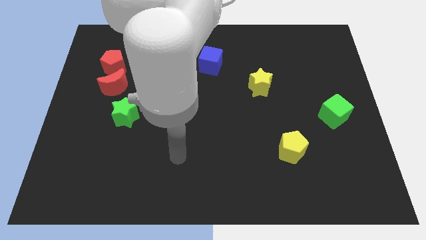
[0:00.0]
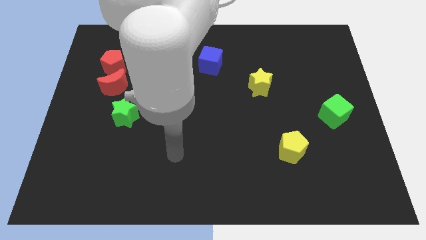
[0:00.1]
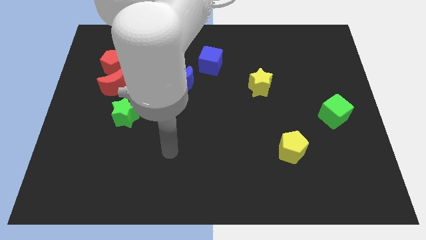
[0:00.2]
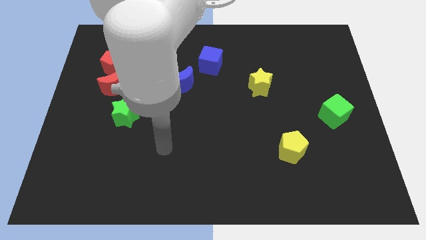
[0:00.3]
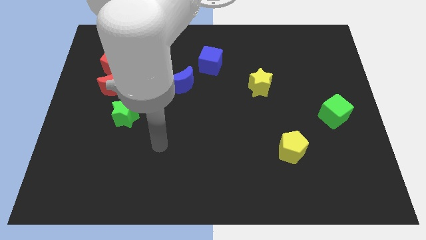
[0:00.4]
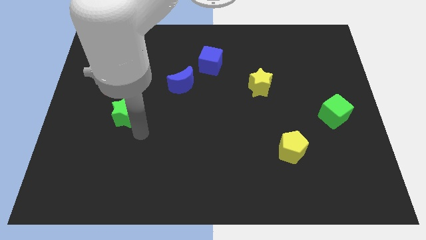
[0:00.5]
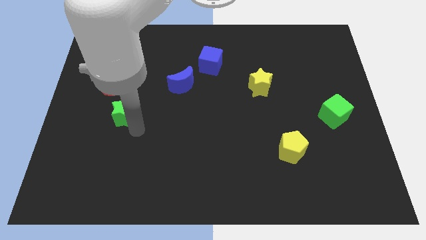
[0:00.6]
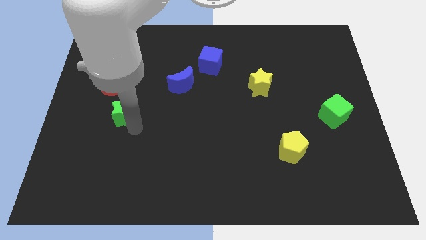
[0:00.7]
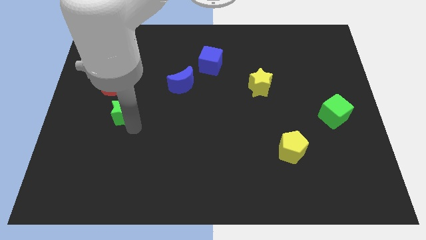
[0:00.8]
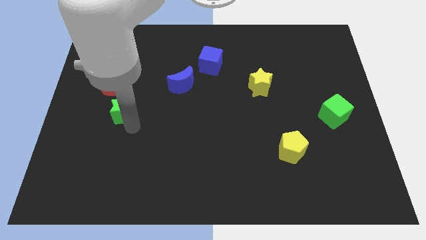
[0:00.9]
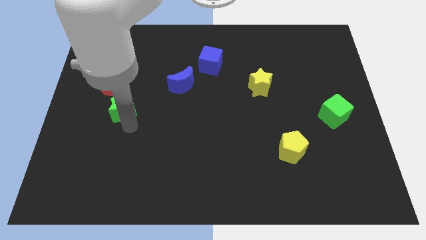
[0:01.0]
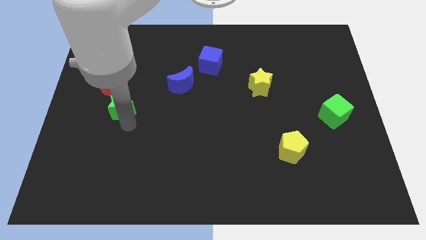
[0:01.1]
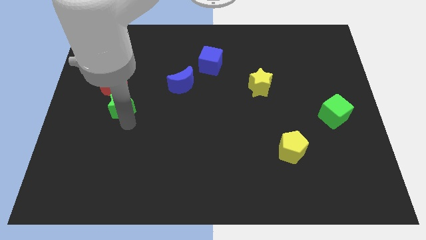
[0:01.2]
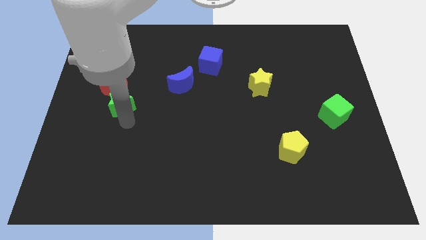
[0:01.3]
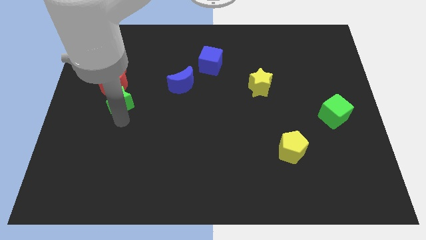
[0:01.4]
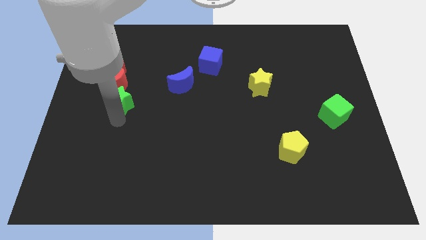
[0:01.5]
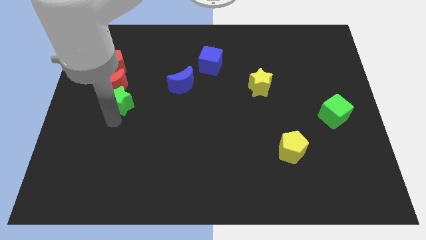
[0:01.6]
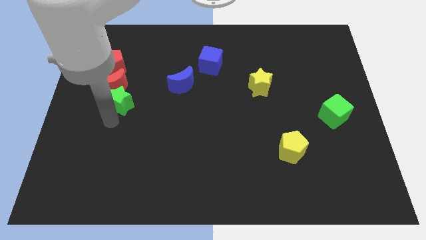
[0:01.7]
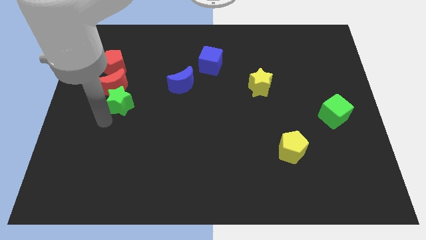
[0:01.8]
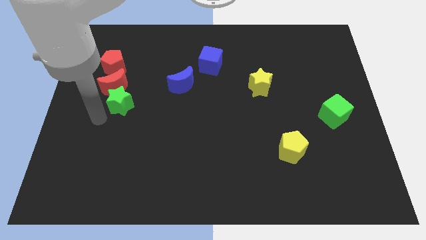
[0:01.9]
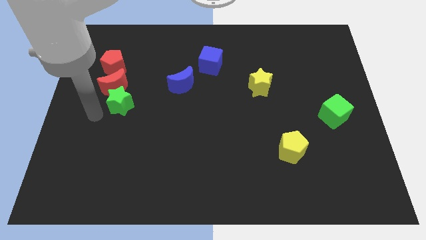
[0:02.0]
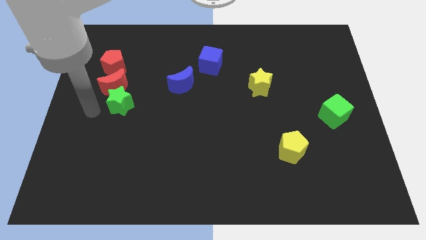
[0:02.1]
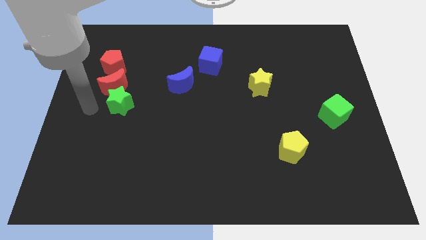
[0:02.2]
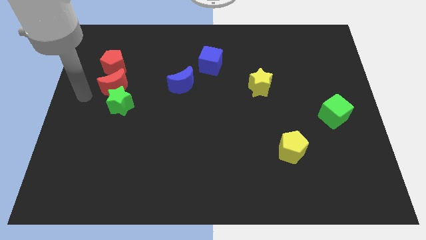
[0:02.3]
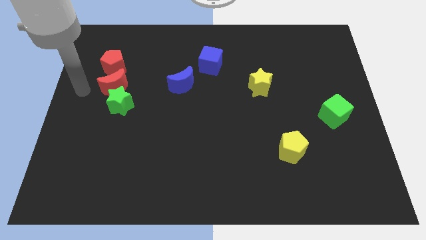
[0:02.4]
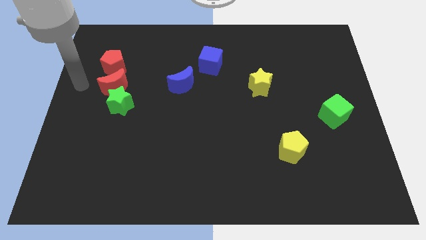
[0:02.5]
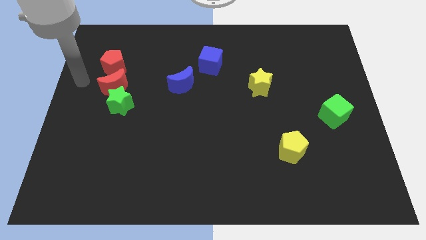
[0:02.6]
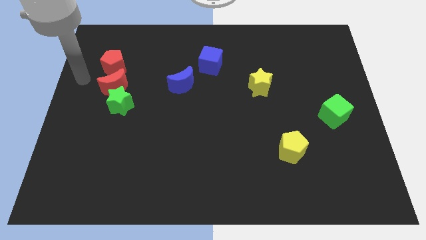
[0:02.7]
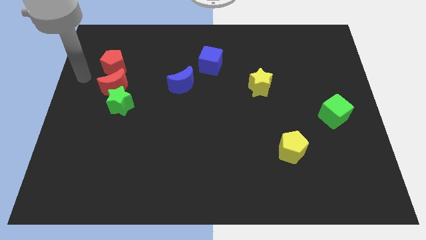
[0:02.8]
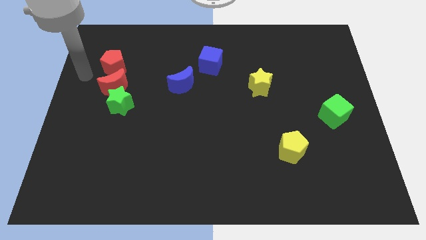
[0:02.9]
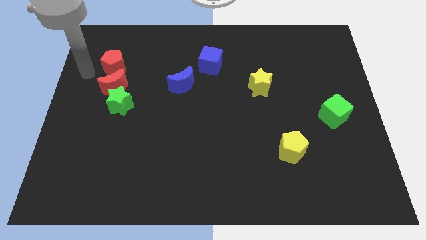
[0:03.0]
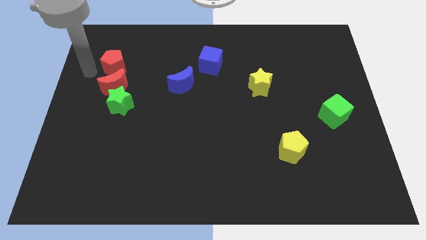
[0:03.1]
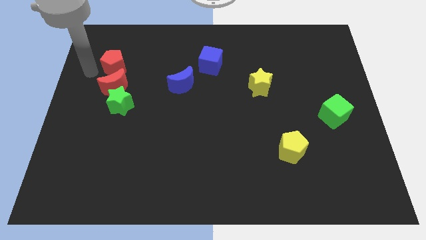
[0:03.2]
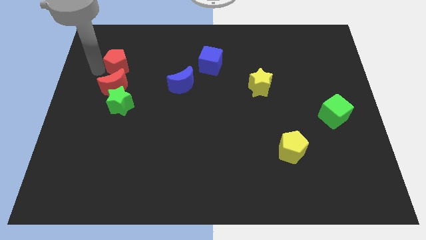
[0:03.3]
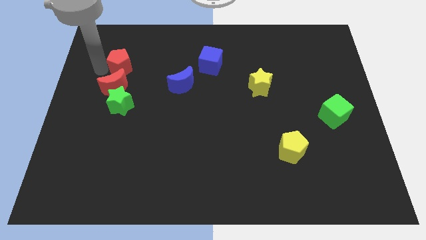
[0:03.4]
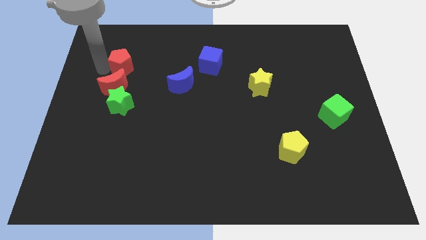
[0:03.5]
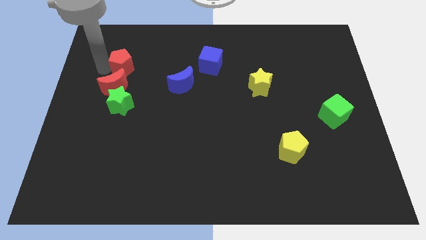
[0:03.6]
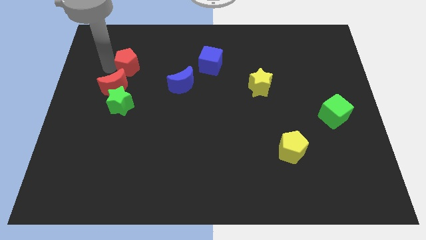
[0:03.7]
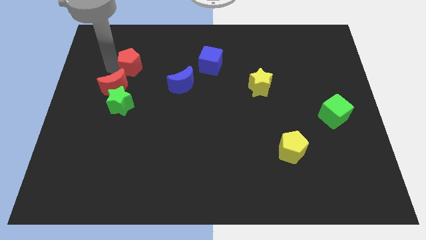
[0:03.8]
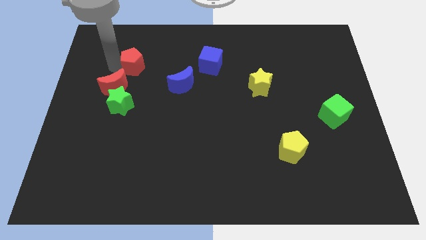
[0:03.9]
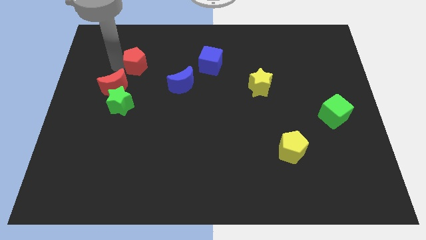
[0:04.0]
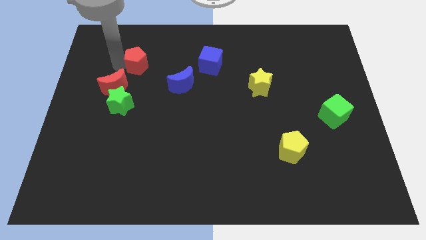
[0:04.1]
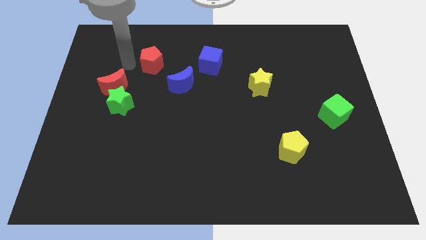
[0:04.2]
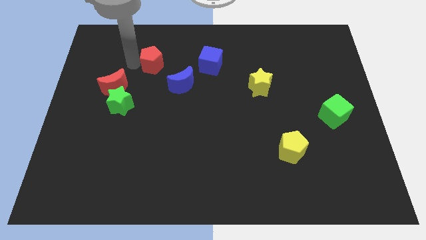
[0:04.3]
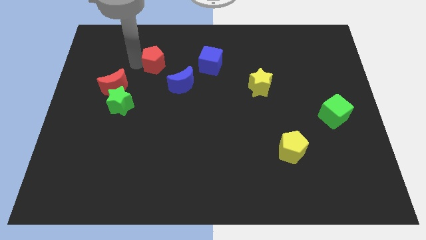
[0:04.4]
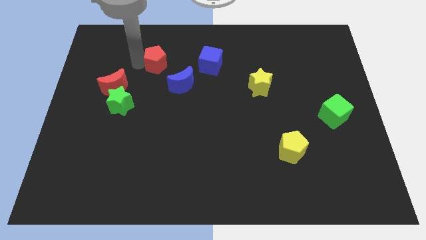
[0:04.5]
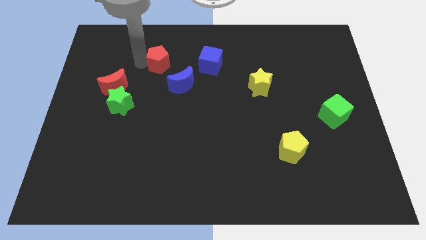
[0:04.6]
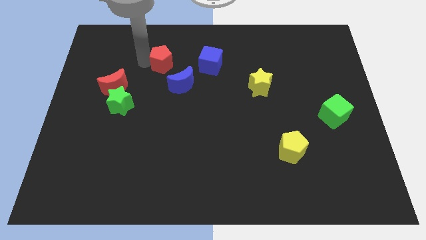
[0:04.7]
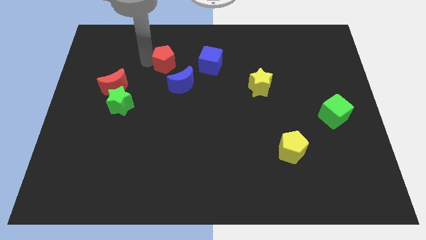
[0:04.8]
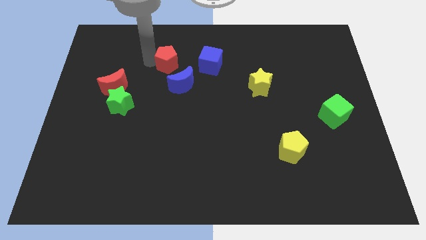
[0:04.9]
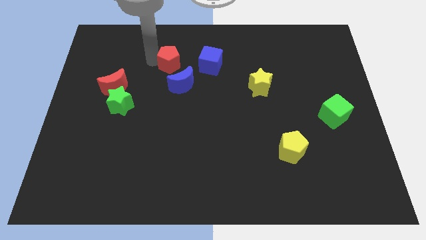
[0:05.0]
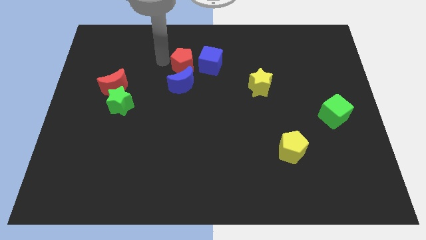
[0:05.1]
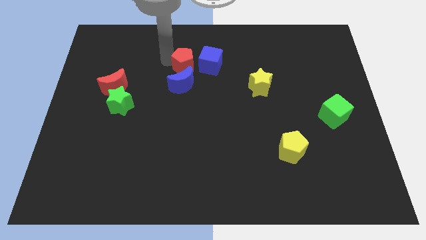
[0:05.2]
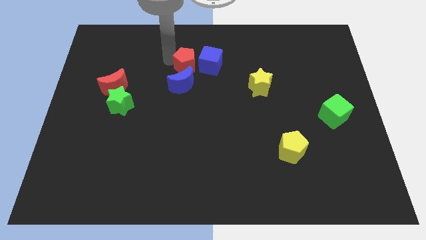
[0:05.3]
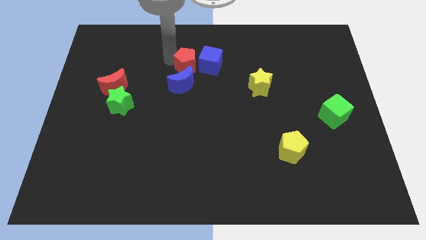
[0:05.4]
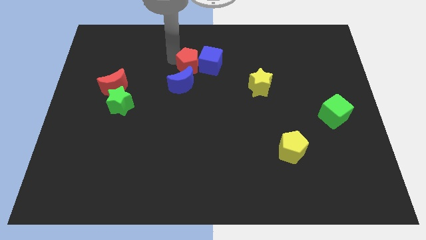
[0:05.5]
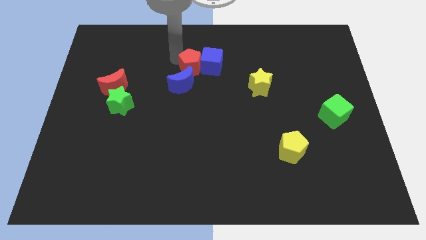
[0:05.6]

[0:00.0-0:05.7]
put the red pentagon next to the blue cube

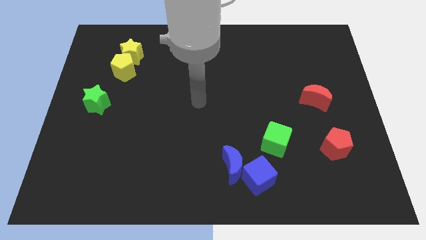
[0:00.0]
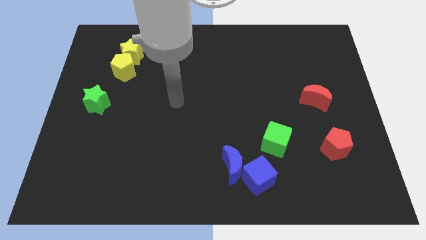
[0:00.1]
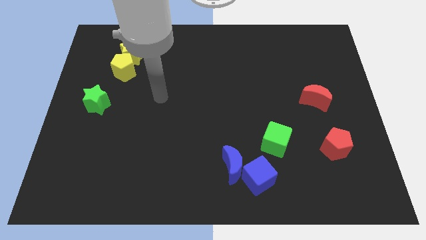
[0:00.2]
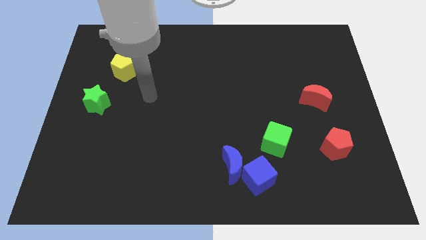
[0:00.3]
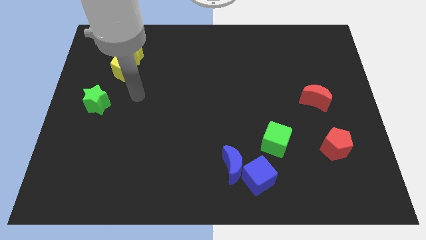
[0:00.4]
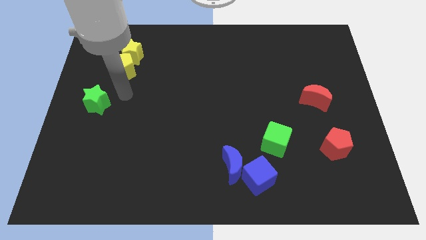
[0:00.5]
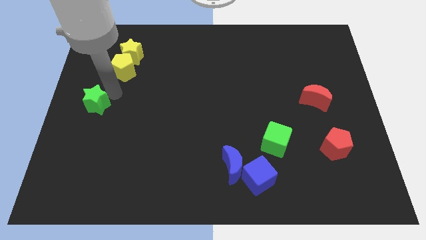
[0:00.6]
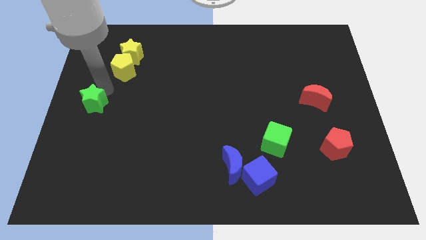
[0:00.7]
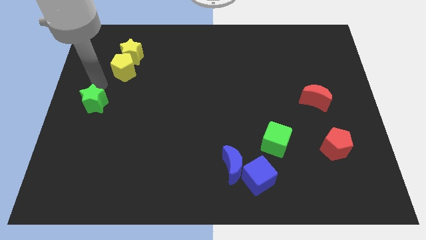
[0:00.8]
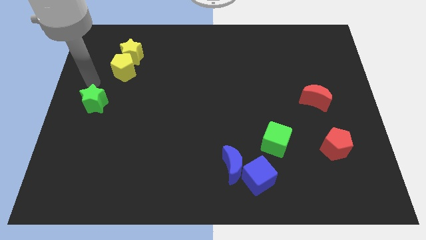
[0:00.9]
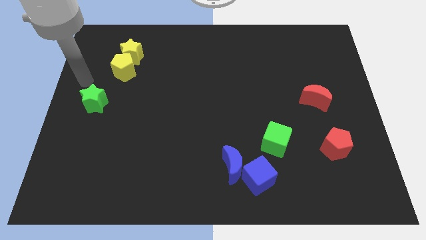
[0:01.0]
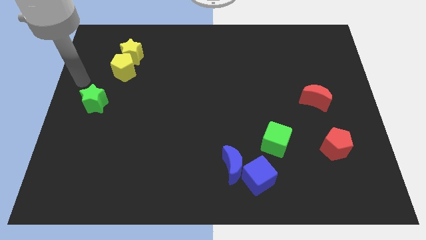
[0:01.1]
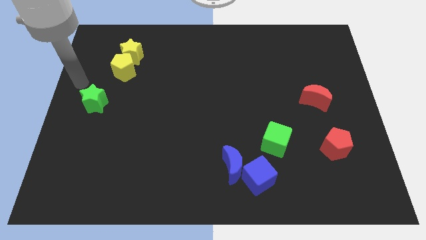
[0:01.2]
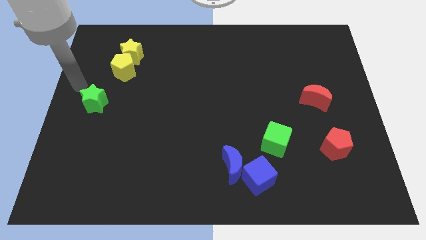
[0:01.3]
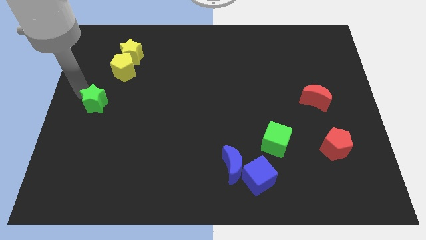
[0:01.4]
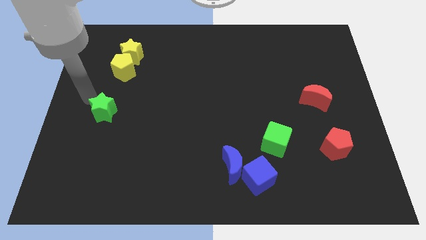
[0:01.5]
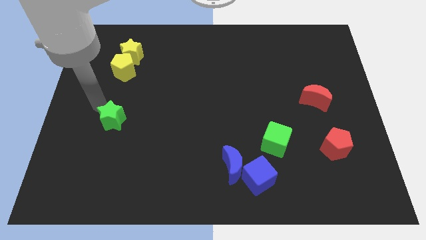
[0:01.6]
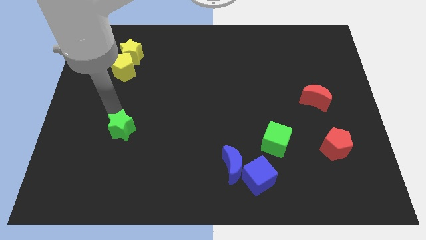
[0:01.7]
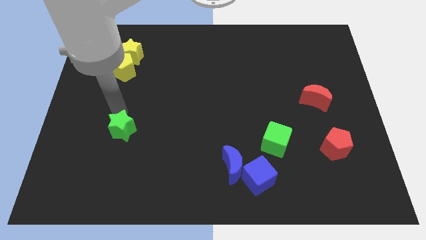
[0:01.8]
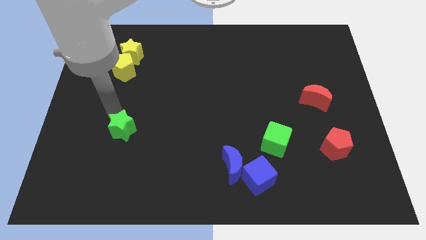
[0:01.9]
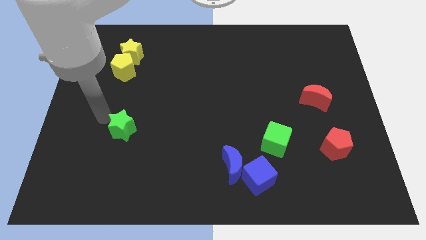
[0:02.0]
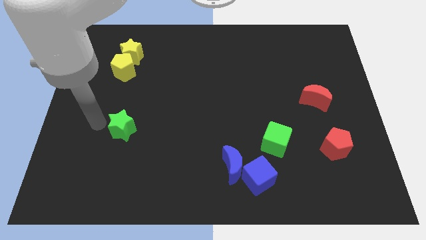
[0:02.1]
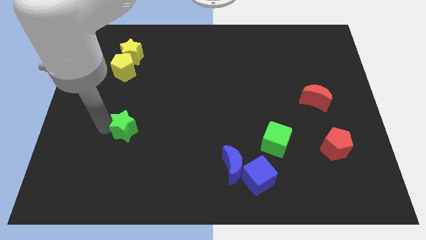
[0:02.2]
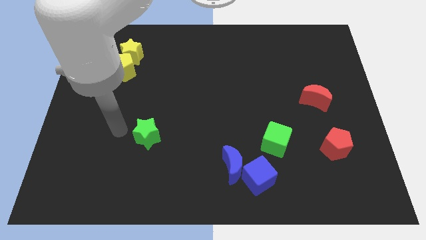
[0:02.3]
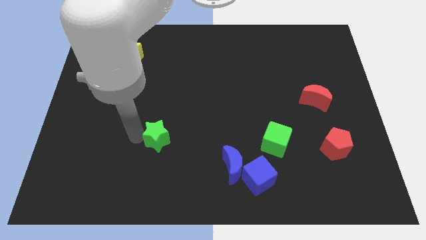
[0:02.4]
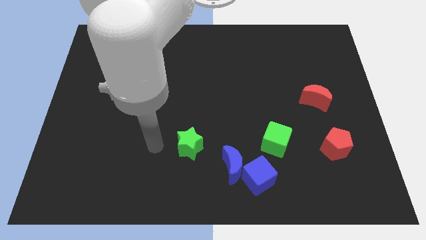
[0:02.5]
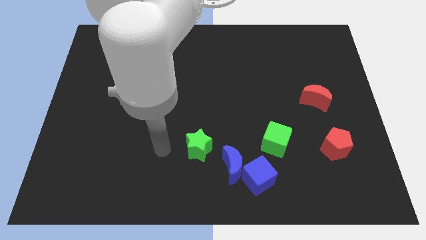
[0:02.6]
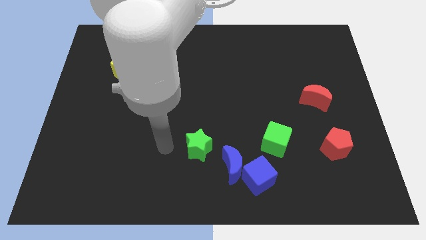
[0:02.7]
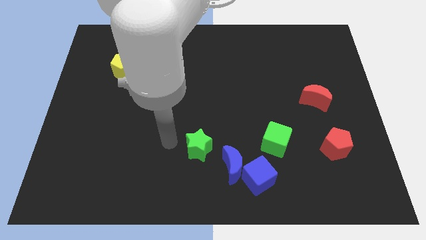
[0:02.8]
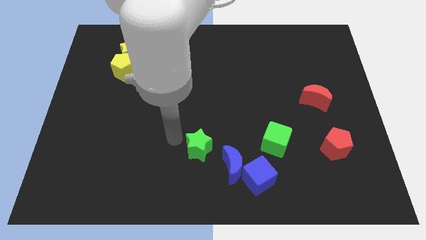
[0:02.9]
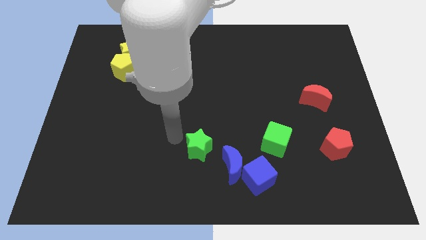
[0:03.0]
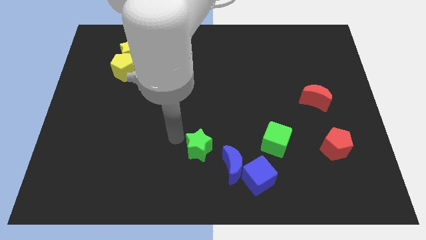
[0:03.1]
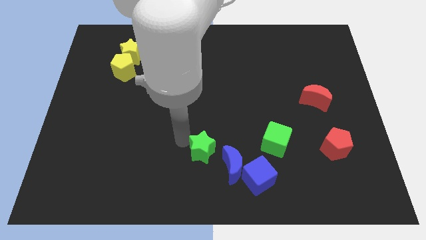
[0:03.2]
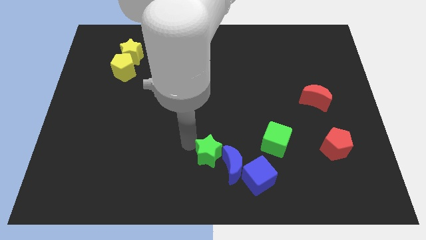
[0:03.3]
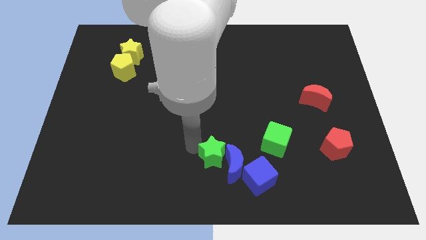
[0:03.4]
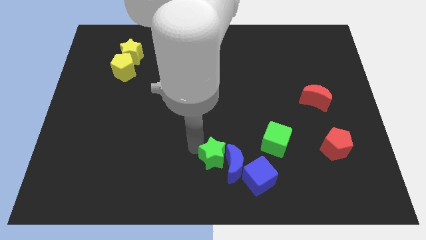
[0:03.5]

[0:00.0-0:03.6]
push the green star towards the blue moon
